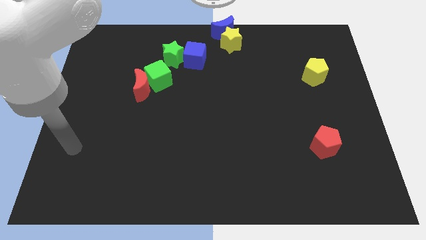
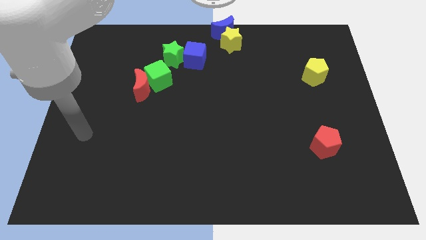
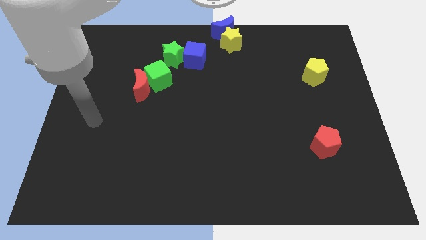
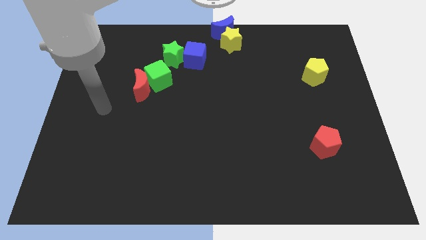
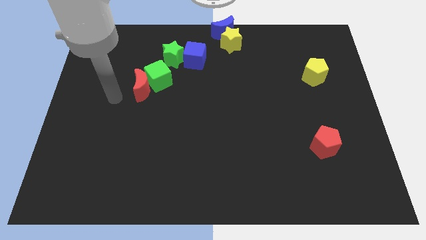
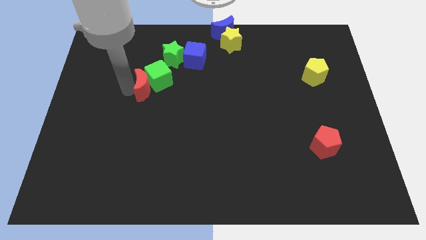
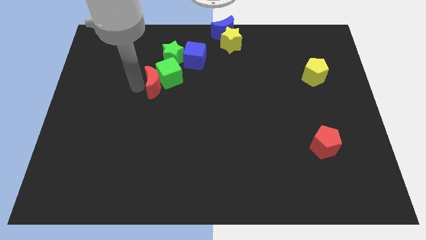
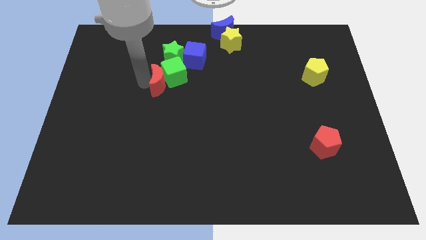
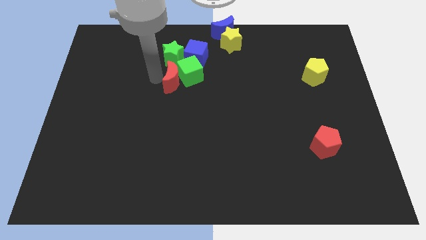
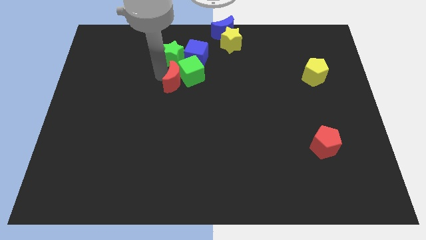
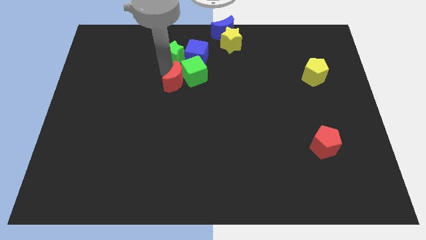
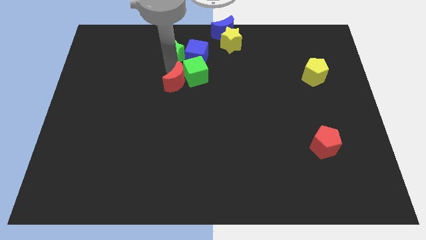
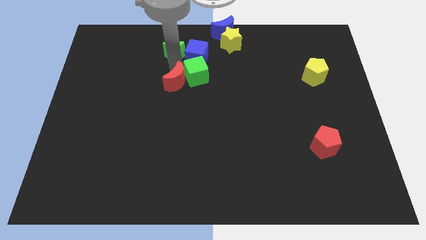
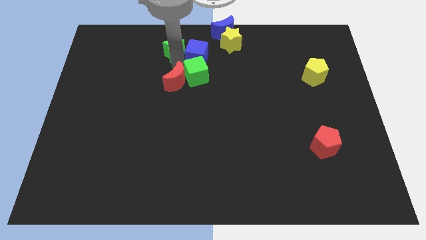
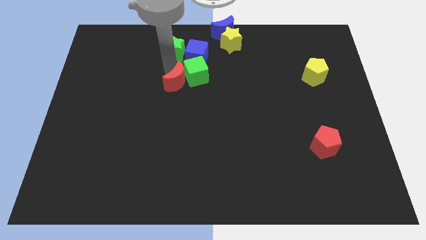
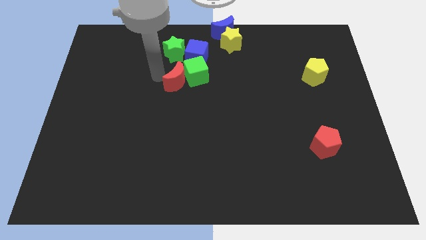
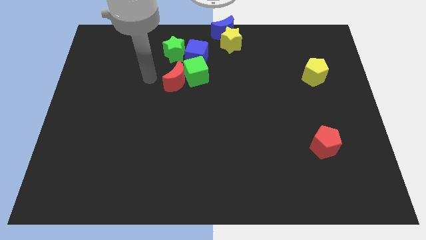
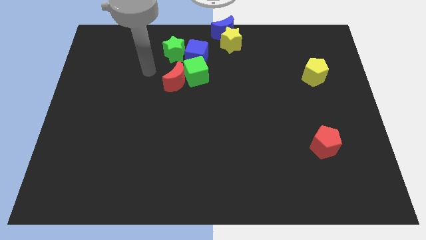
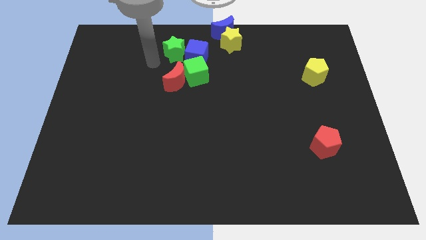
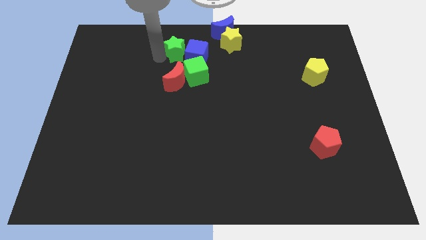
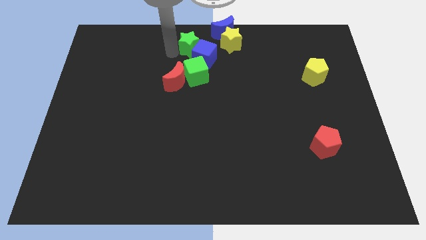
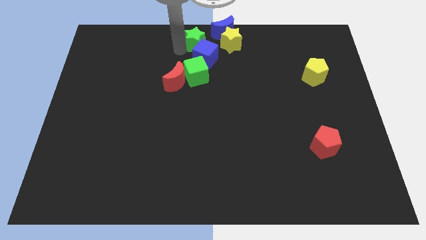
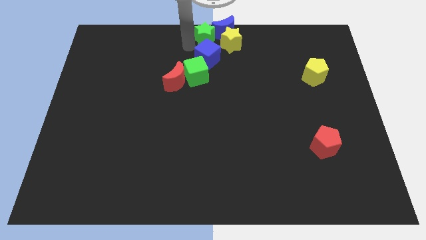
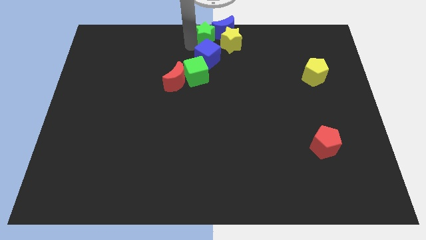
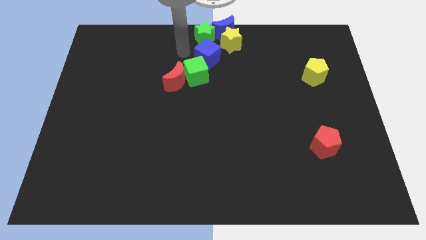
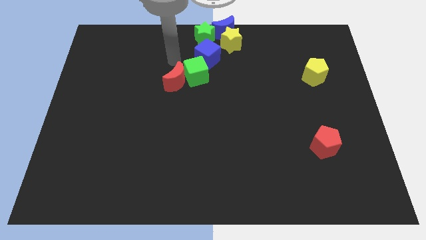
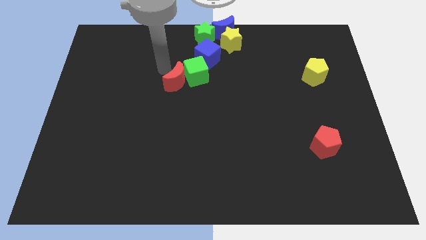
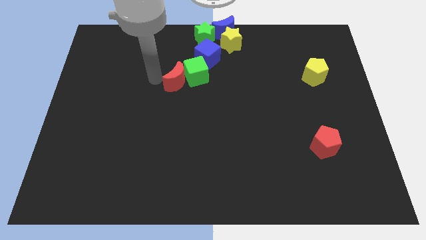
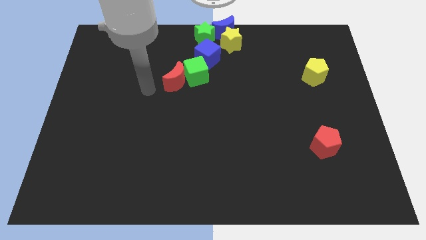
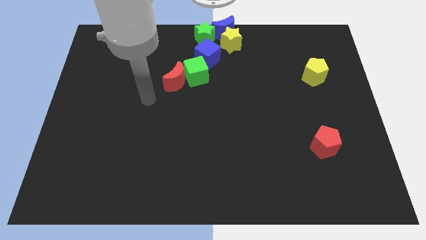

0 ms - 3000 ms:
push the red crescent into the green cube towards the top center of board

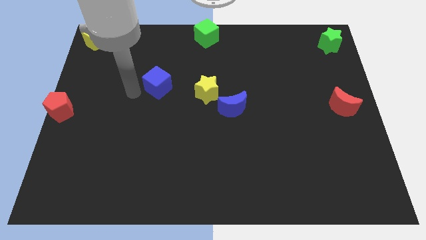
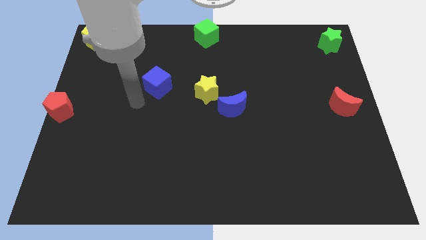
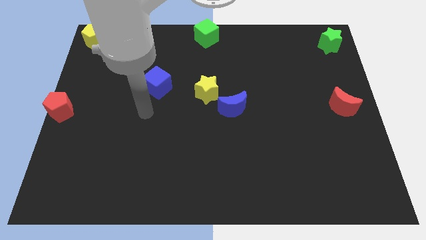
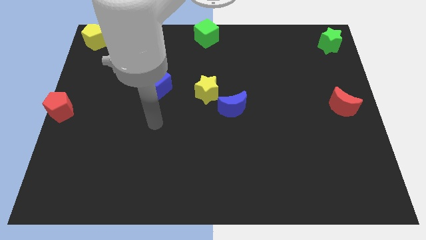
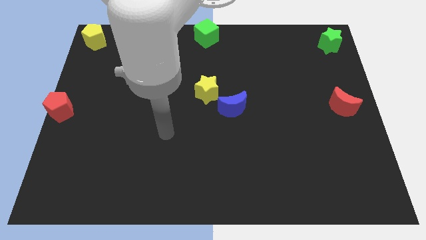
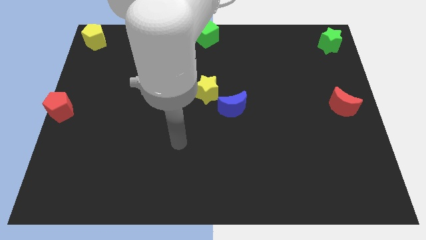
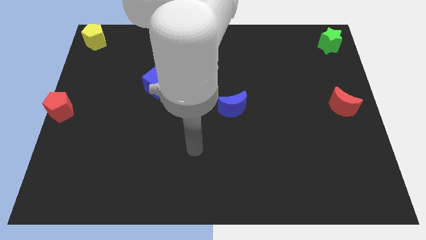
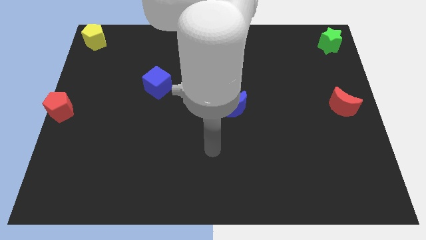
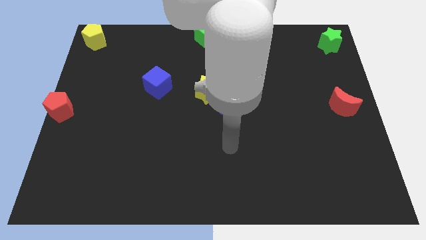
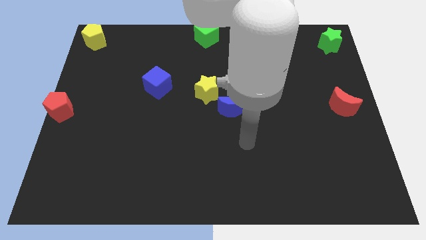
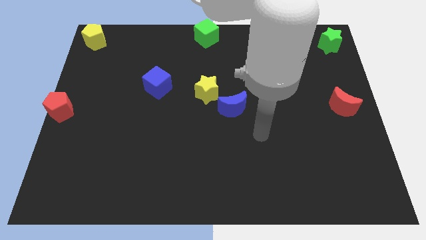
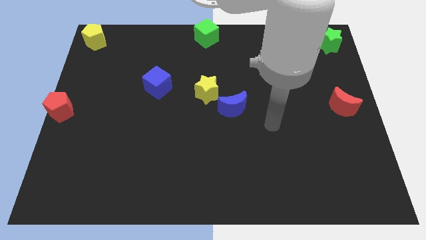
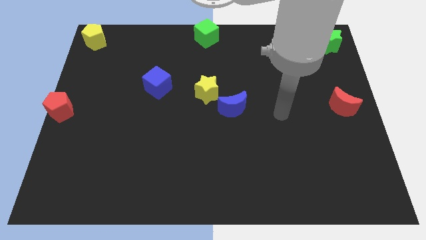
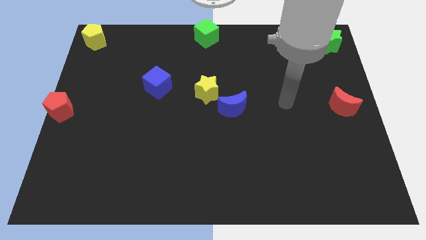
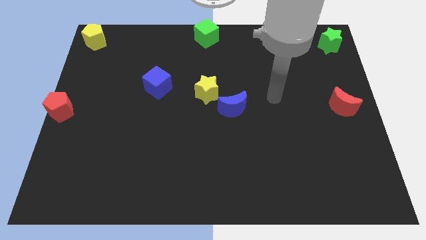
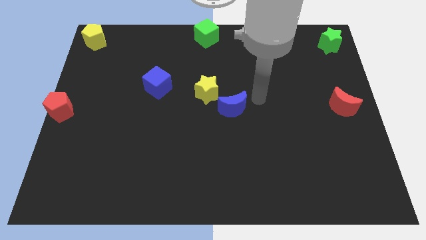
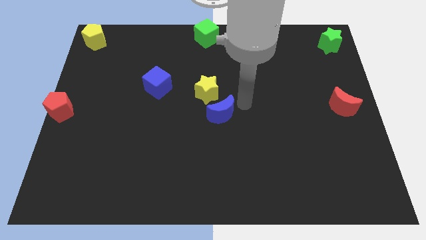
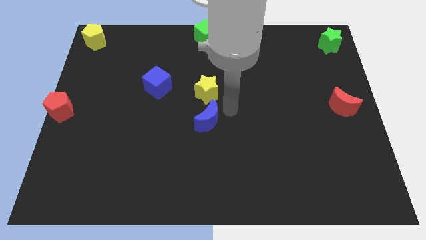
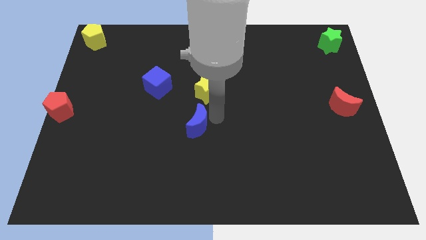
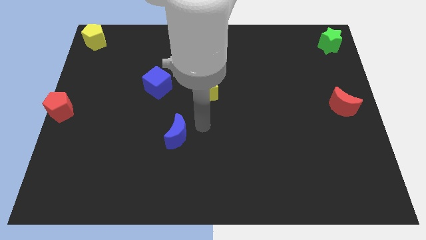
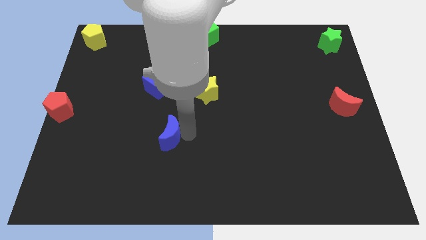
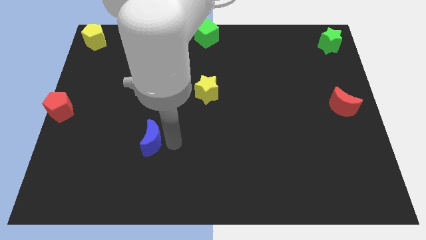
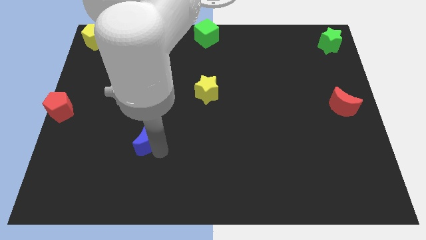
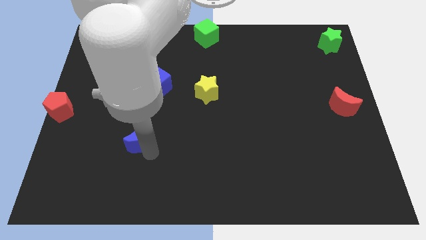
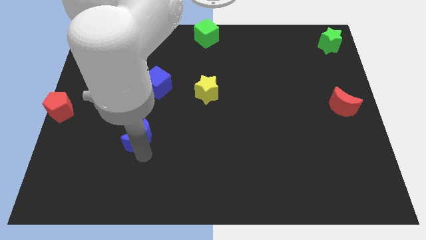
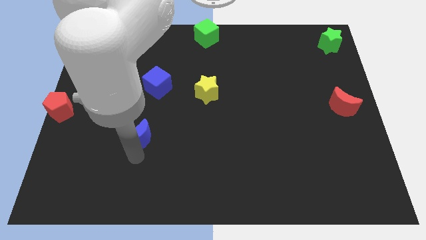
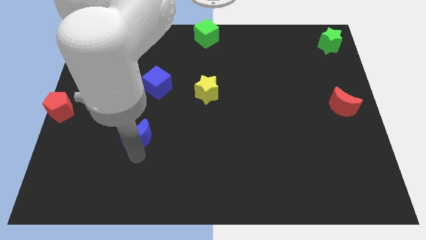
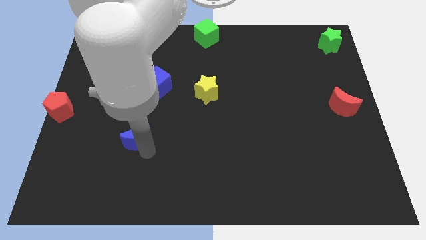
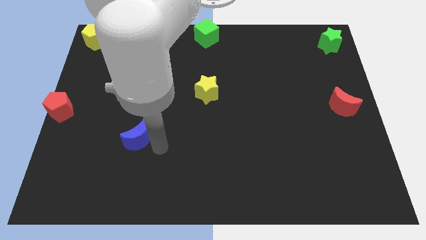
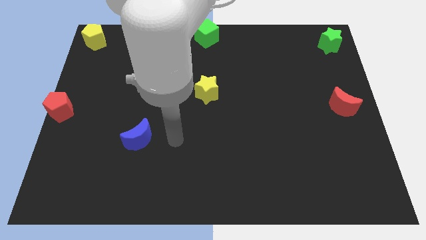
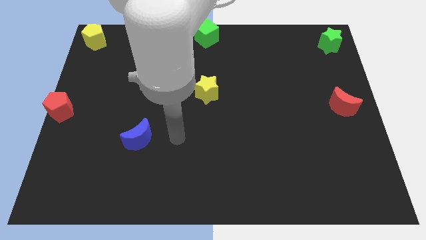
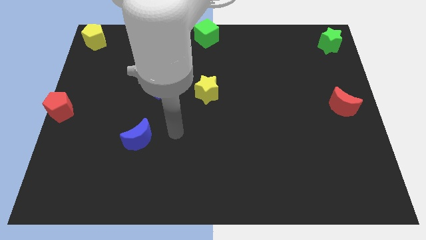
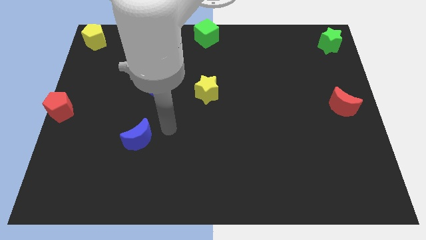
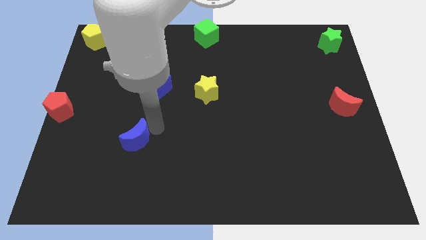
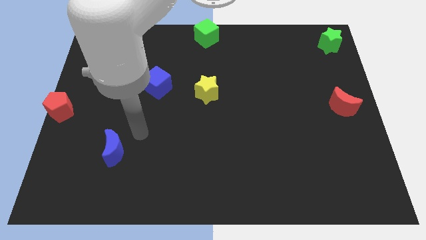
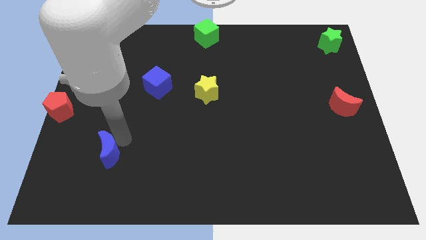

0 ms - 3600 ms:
move the blue crescent diagonally right of the red pentagon

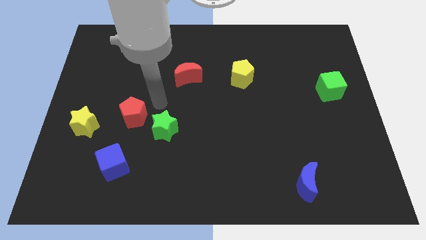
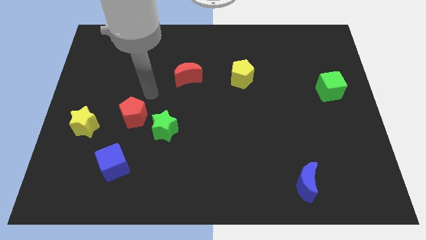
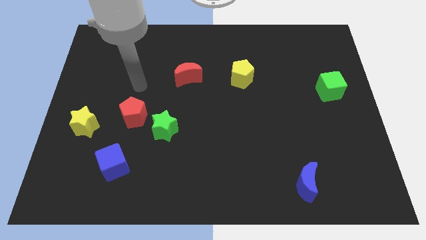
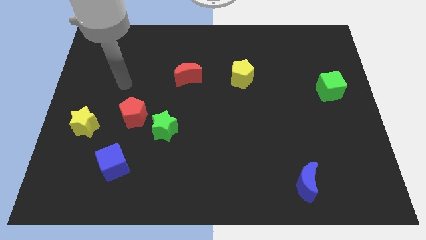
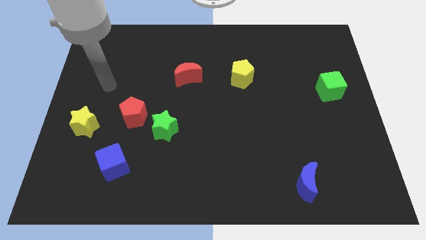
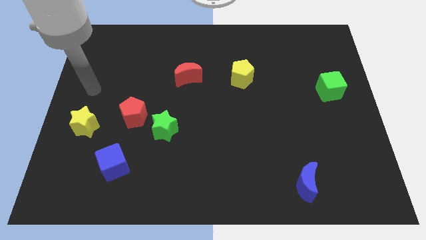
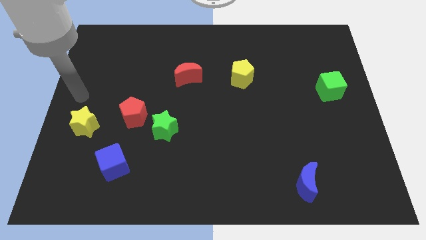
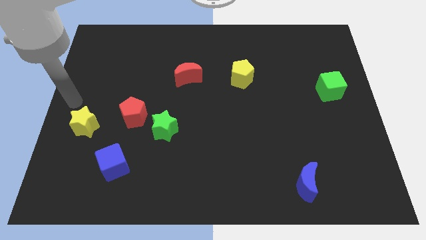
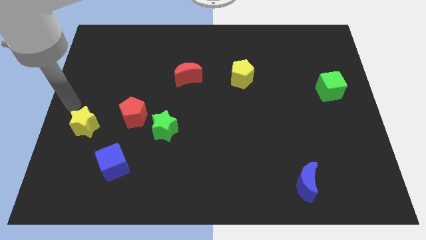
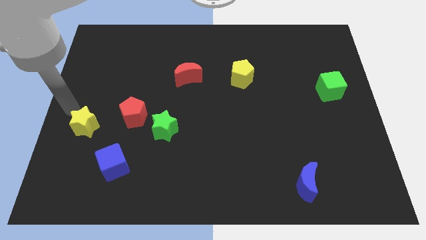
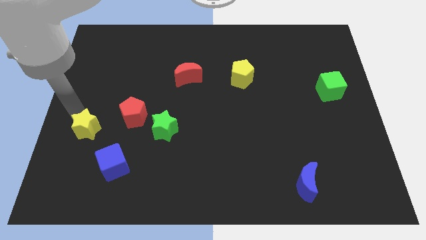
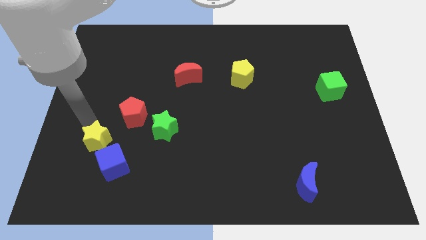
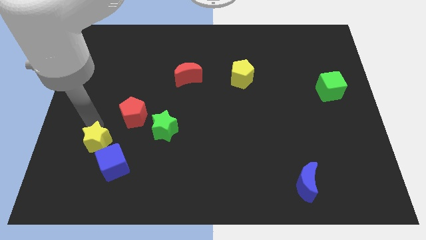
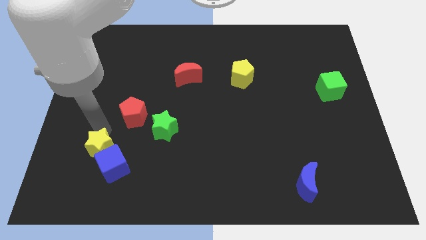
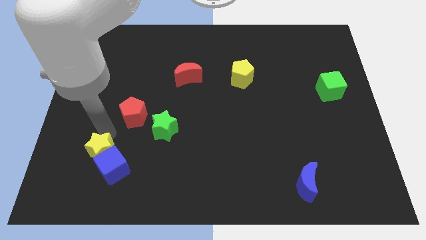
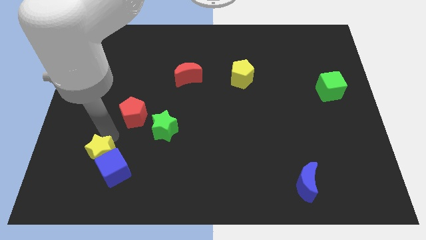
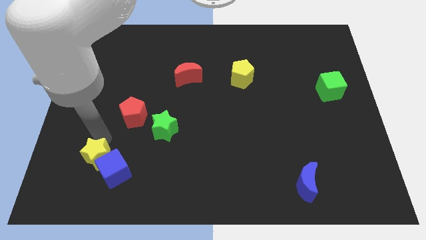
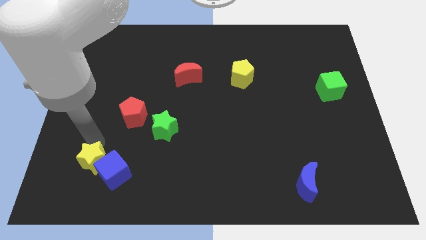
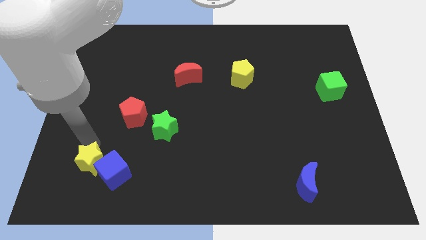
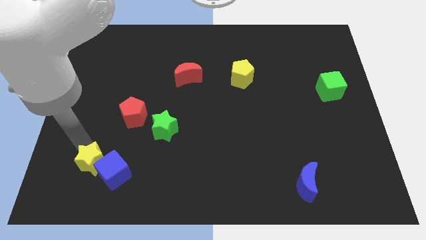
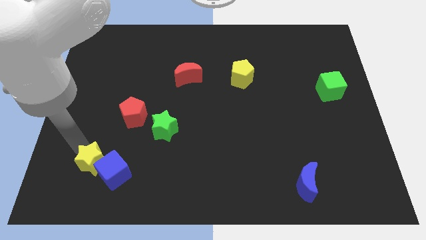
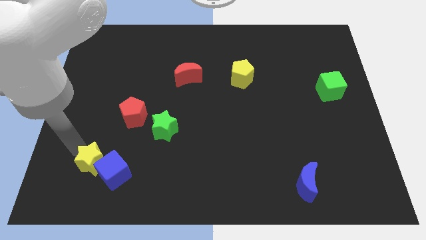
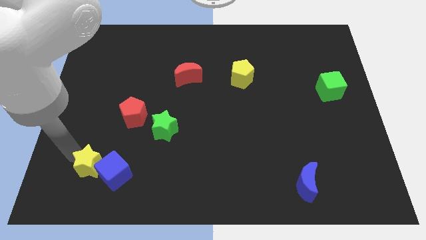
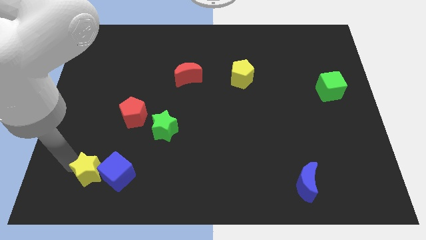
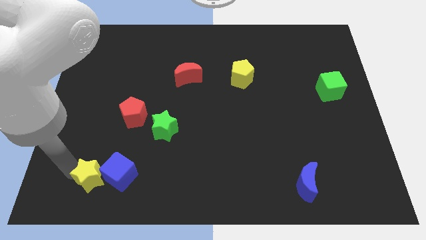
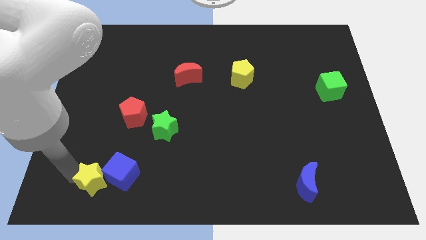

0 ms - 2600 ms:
move the yellow star to the left of the blue cube
